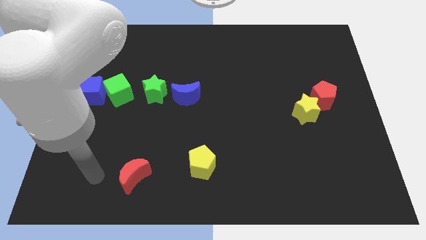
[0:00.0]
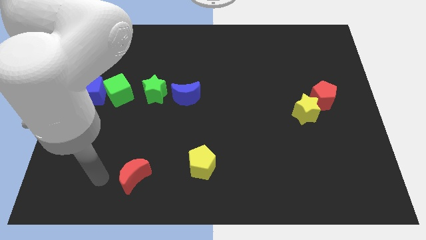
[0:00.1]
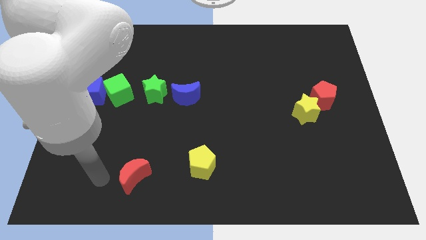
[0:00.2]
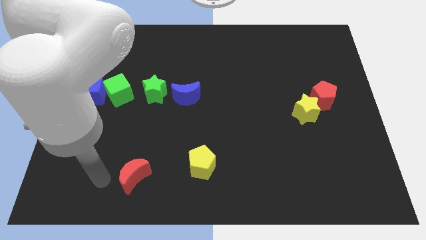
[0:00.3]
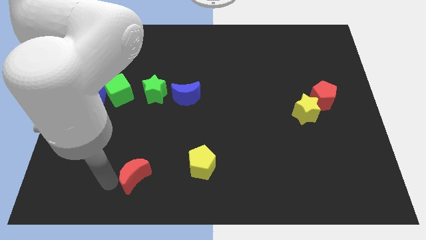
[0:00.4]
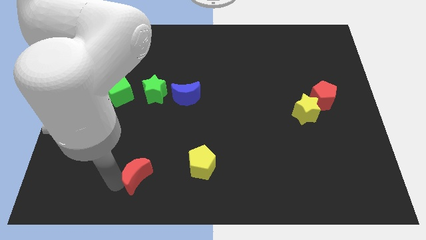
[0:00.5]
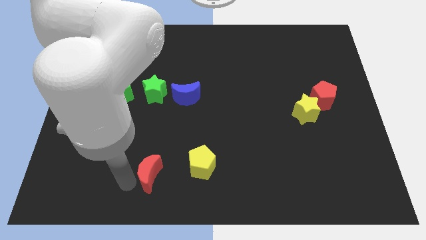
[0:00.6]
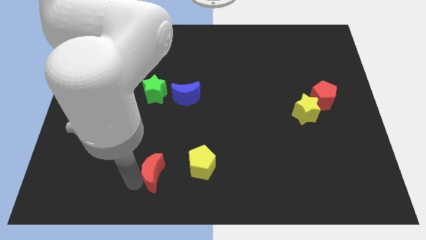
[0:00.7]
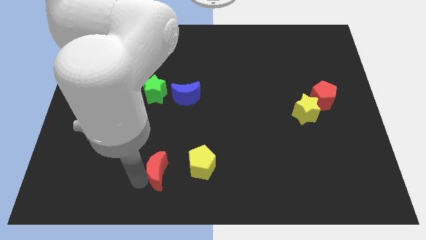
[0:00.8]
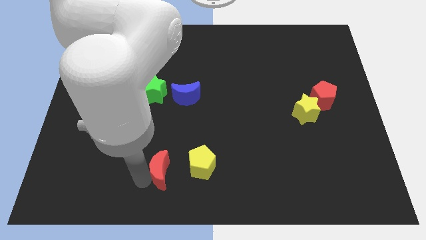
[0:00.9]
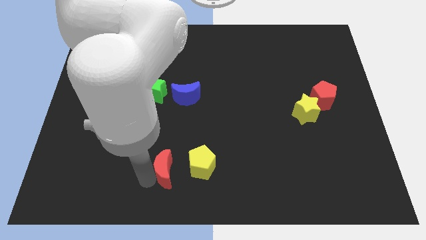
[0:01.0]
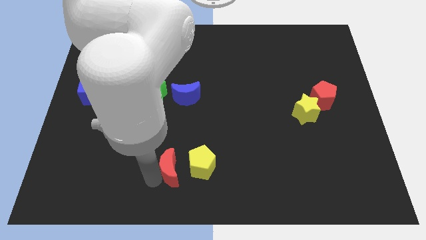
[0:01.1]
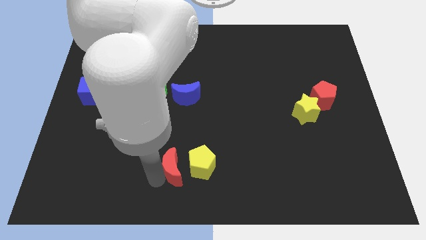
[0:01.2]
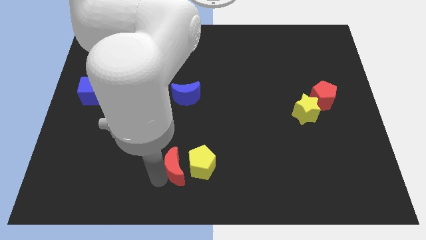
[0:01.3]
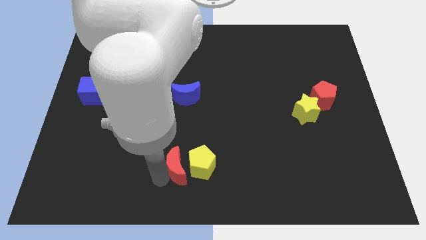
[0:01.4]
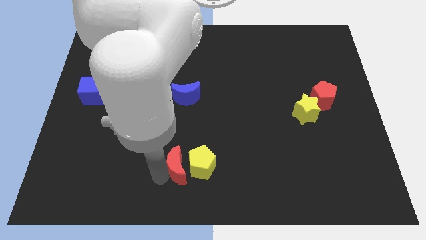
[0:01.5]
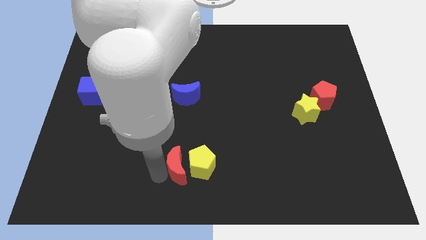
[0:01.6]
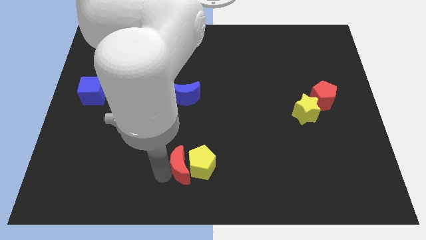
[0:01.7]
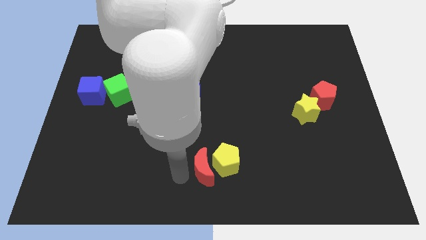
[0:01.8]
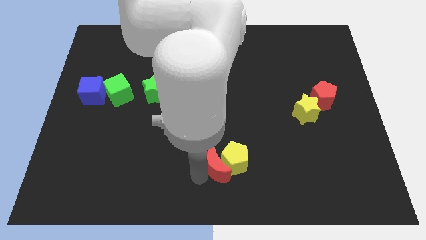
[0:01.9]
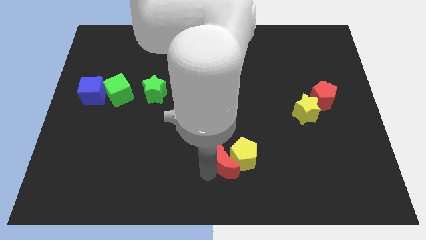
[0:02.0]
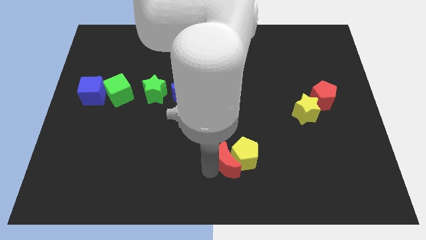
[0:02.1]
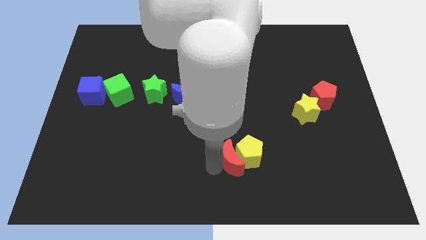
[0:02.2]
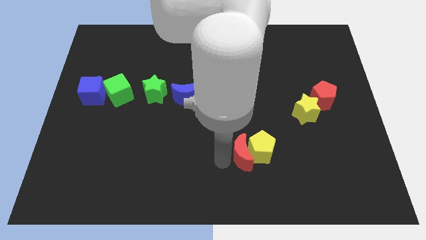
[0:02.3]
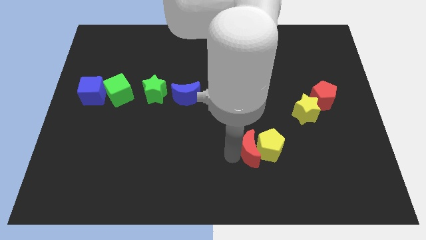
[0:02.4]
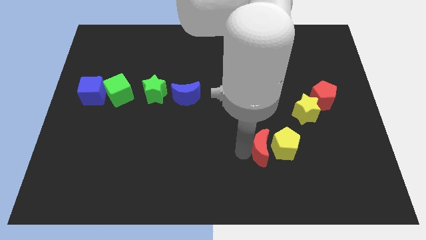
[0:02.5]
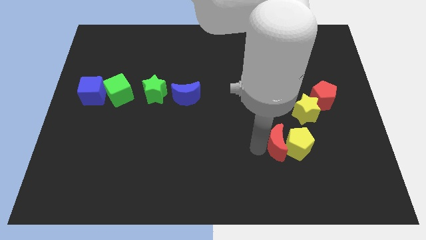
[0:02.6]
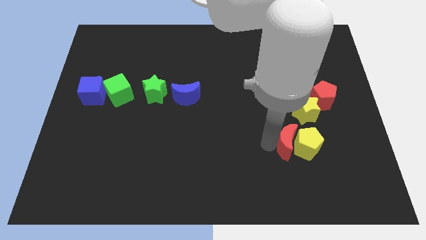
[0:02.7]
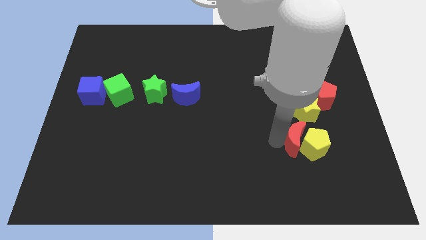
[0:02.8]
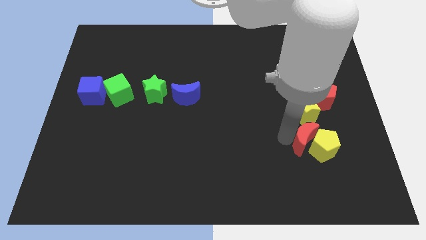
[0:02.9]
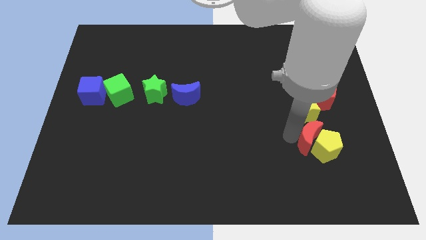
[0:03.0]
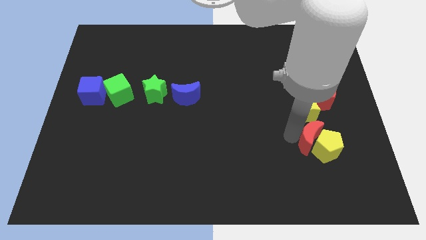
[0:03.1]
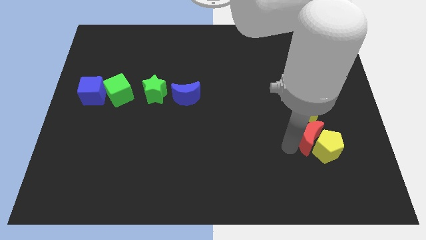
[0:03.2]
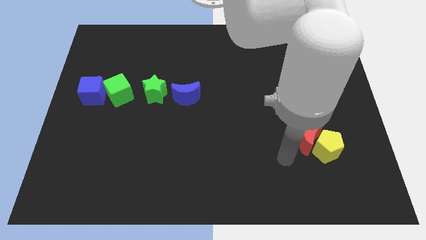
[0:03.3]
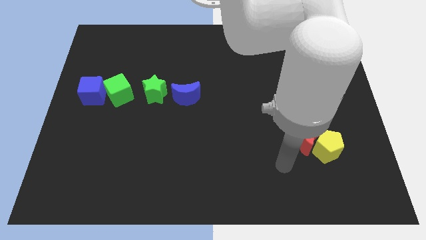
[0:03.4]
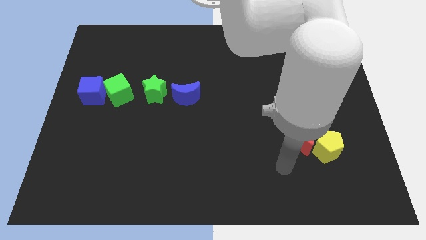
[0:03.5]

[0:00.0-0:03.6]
move the red moon and the yellow pentagon to the right side of the board

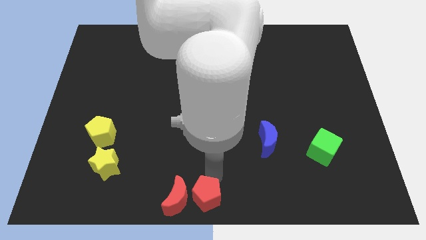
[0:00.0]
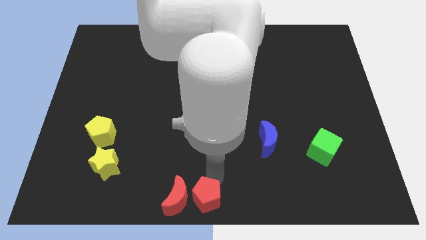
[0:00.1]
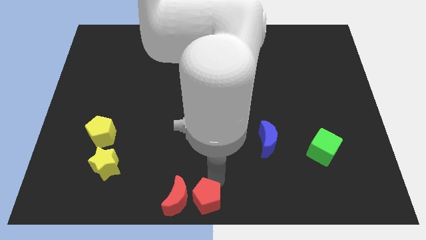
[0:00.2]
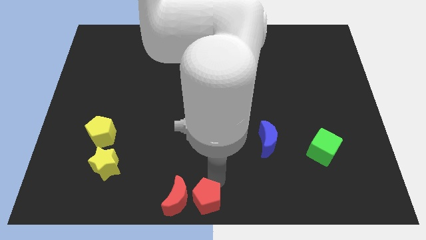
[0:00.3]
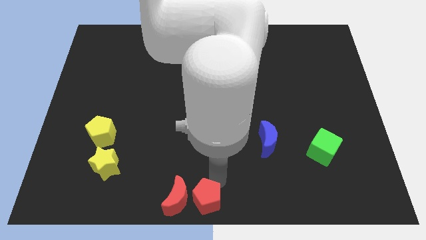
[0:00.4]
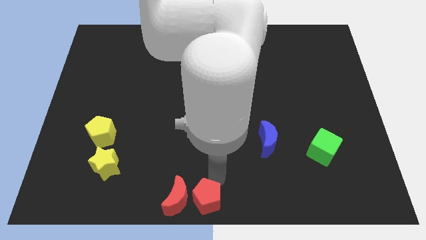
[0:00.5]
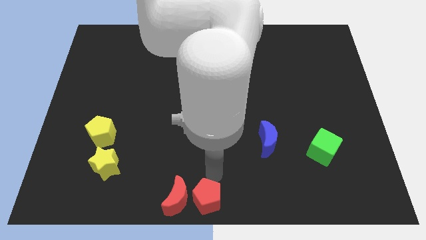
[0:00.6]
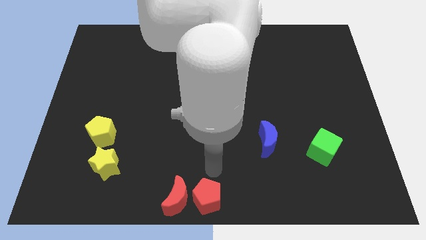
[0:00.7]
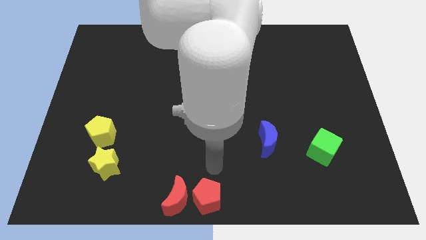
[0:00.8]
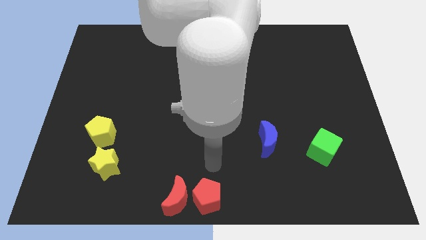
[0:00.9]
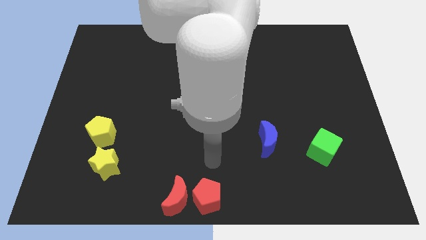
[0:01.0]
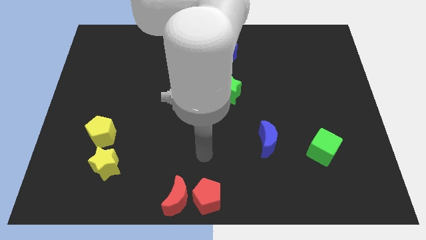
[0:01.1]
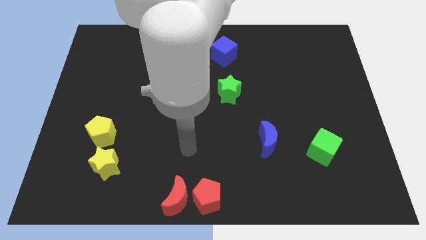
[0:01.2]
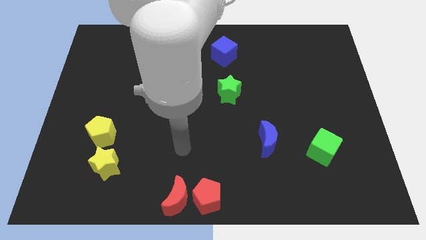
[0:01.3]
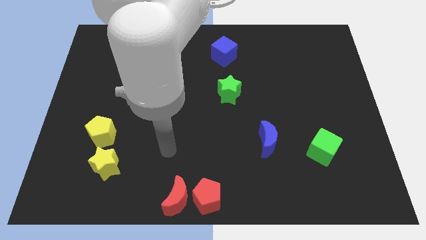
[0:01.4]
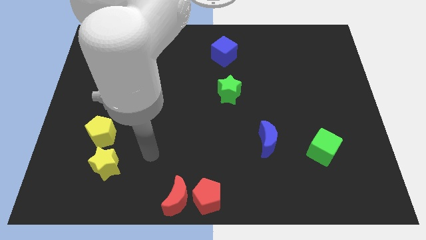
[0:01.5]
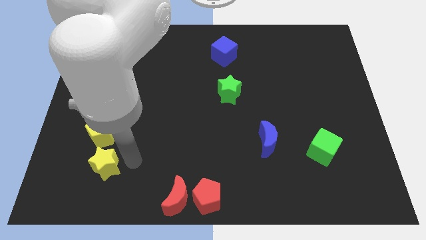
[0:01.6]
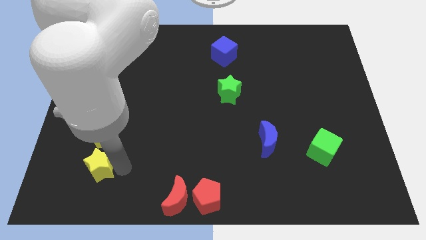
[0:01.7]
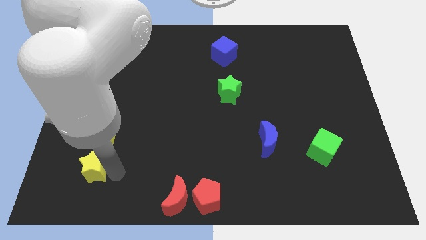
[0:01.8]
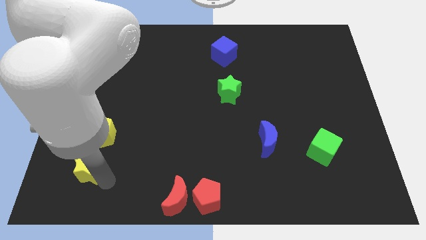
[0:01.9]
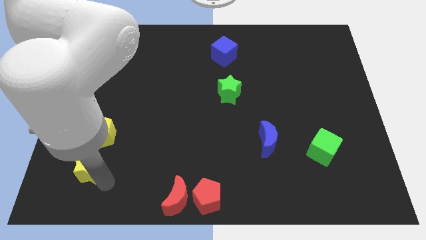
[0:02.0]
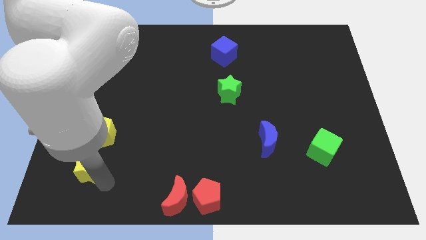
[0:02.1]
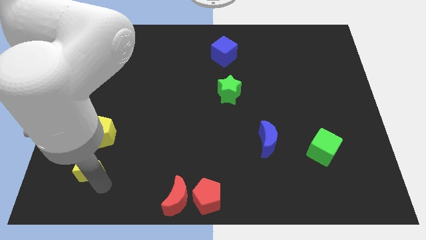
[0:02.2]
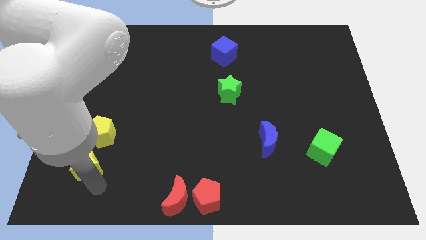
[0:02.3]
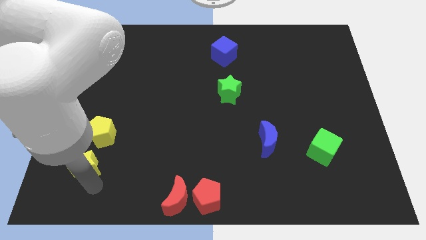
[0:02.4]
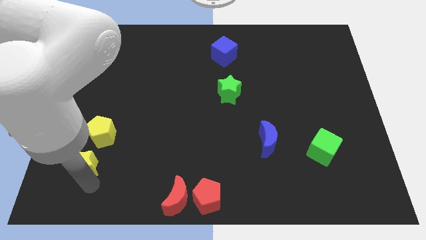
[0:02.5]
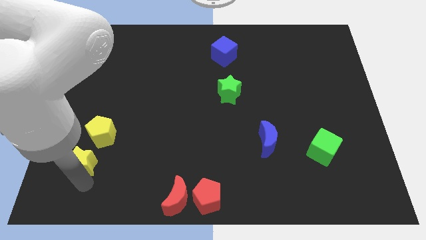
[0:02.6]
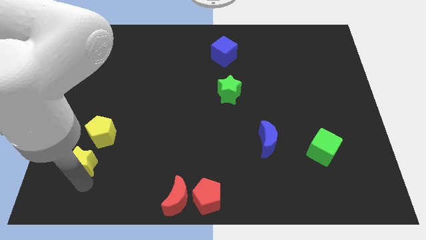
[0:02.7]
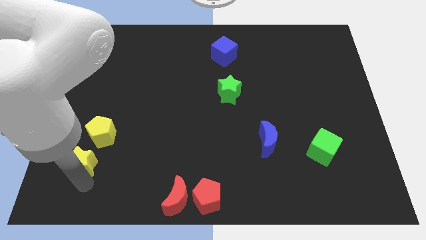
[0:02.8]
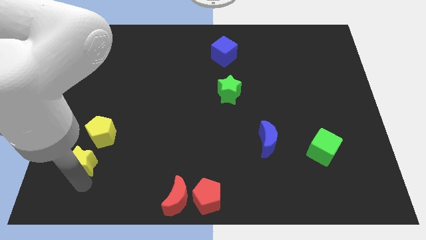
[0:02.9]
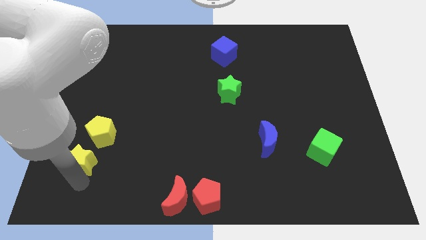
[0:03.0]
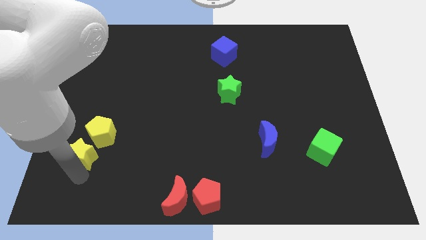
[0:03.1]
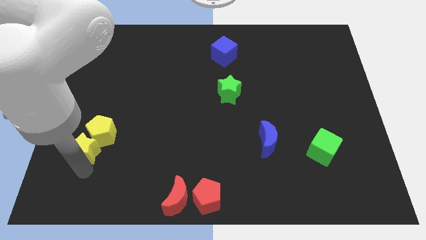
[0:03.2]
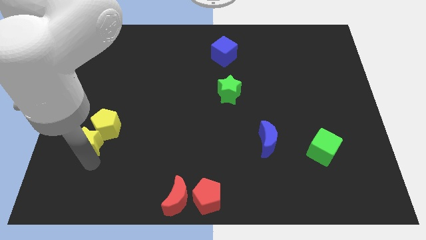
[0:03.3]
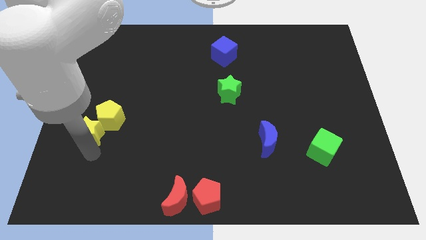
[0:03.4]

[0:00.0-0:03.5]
move the yellow star into the yellow pentagon

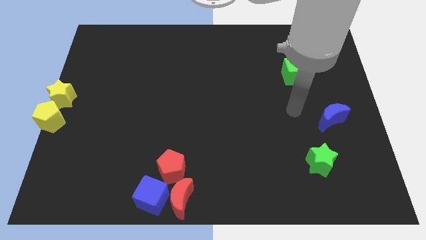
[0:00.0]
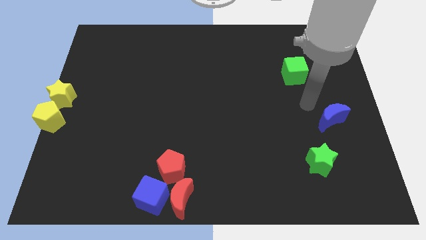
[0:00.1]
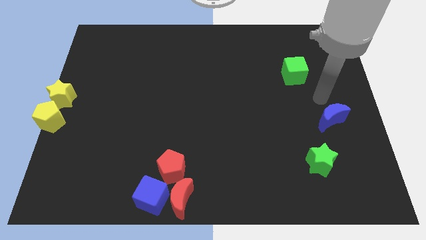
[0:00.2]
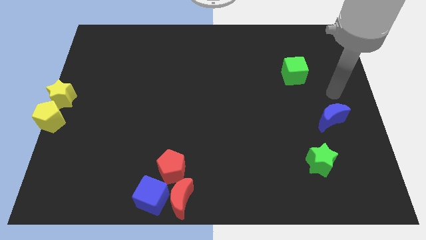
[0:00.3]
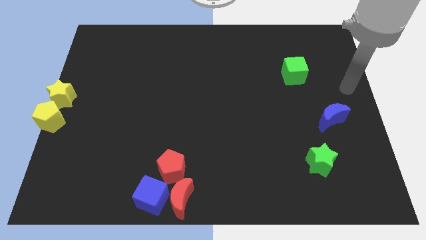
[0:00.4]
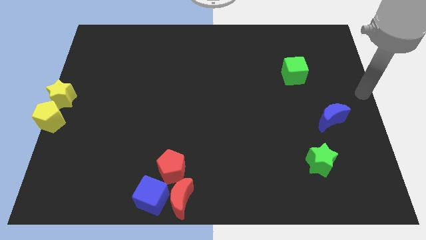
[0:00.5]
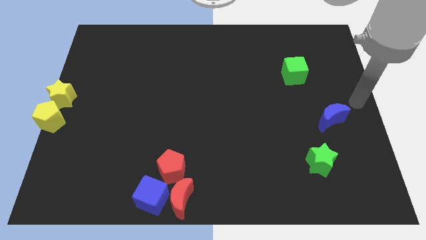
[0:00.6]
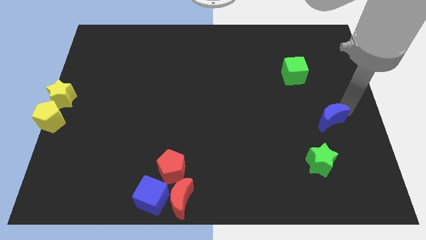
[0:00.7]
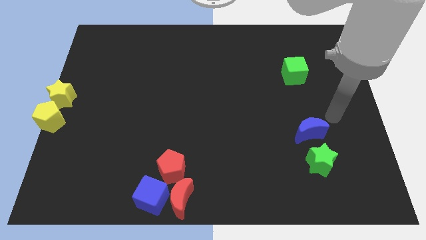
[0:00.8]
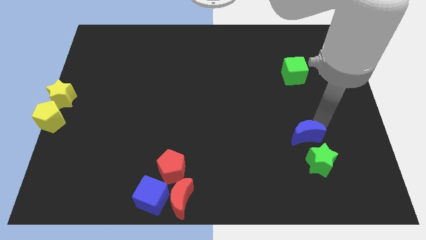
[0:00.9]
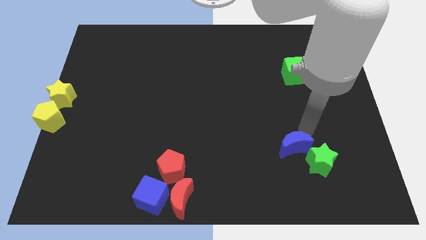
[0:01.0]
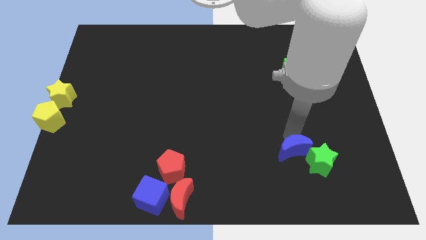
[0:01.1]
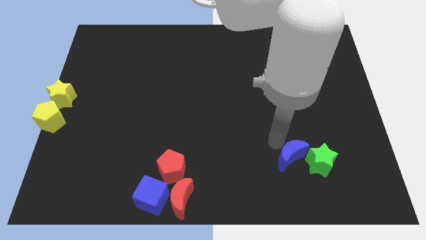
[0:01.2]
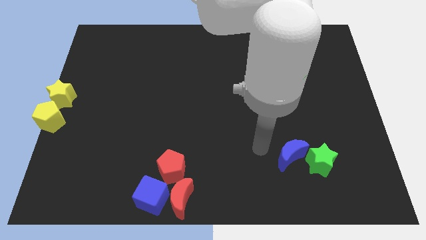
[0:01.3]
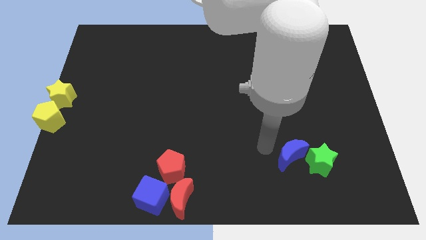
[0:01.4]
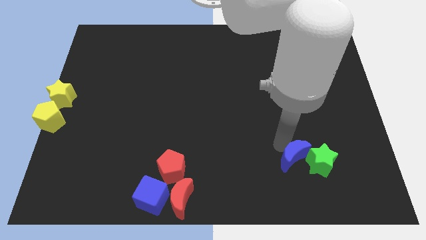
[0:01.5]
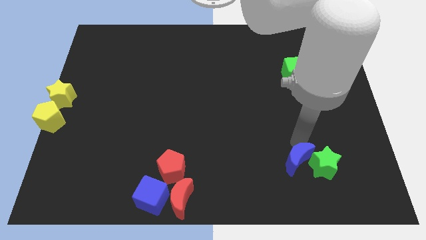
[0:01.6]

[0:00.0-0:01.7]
drag the blue moon into the green star

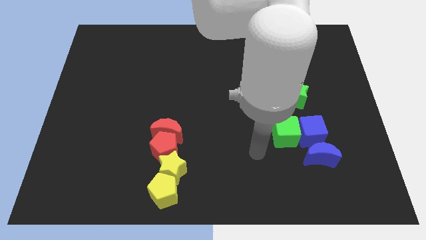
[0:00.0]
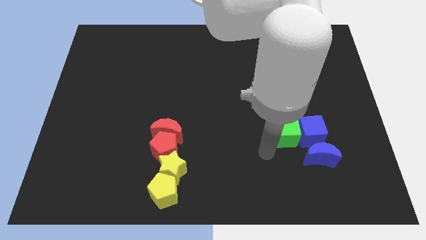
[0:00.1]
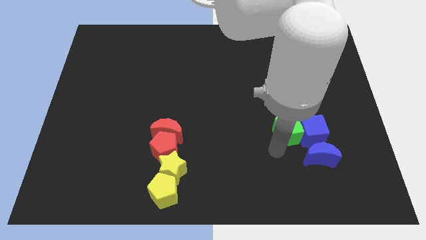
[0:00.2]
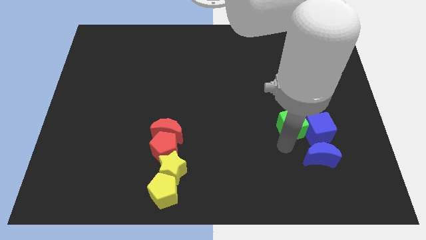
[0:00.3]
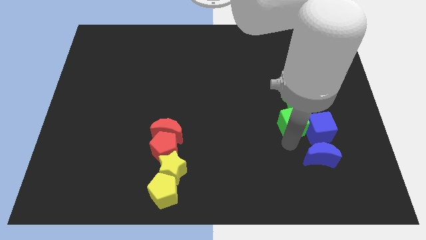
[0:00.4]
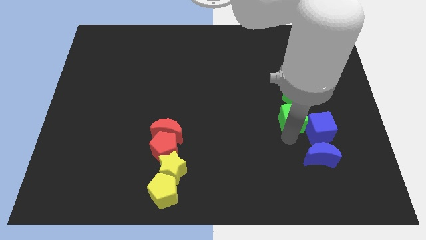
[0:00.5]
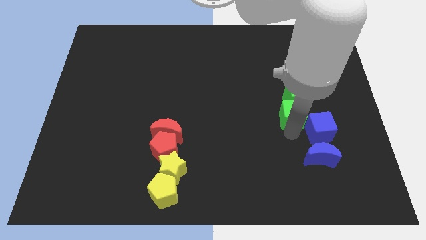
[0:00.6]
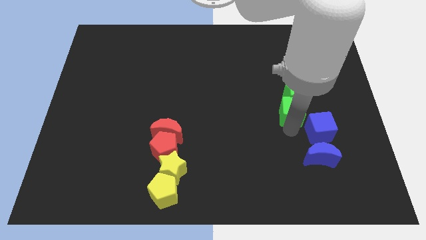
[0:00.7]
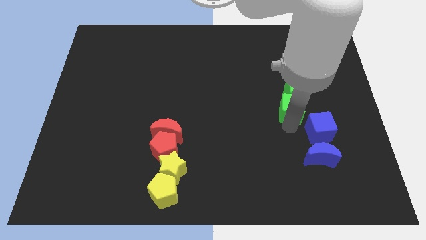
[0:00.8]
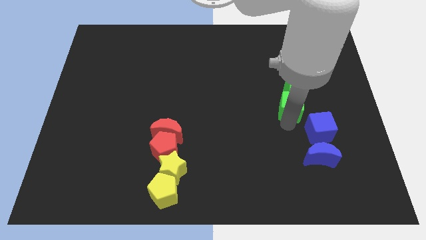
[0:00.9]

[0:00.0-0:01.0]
push the green cube into the green star
